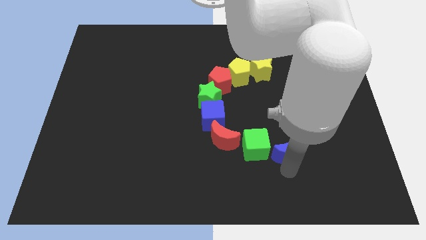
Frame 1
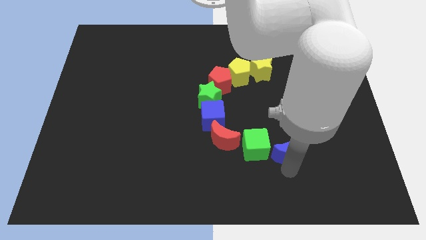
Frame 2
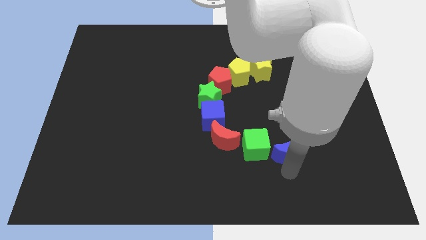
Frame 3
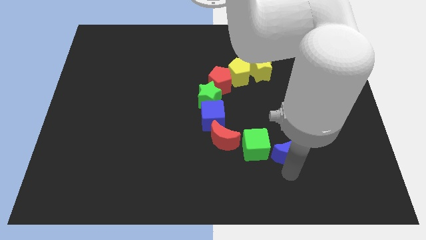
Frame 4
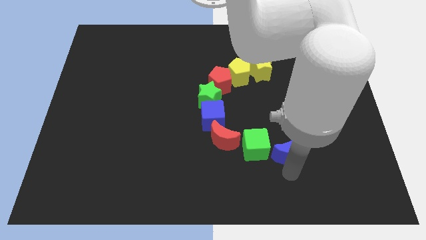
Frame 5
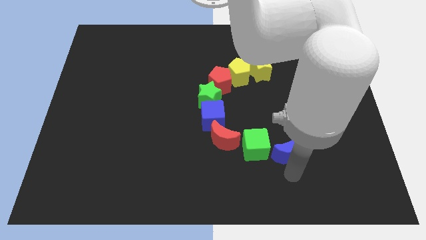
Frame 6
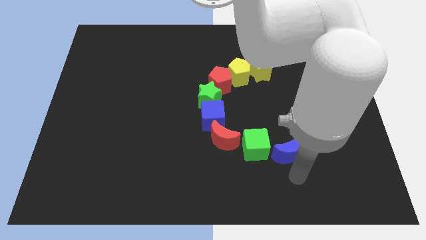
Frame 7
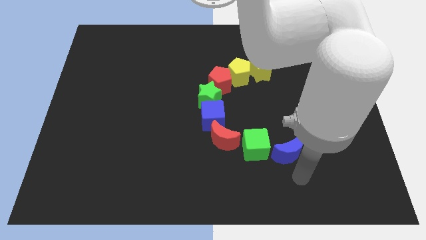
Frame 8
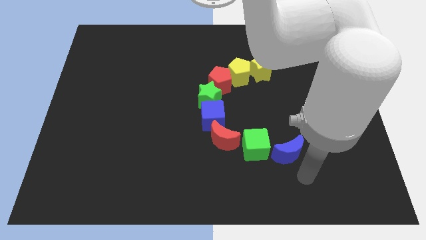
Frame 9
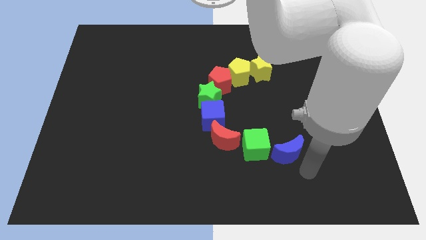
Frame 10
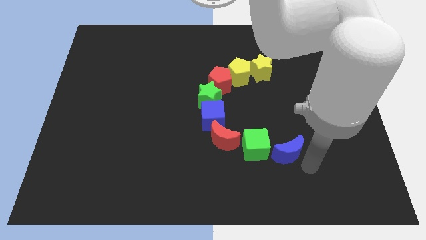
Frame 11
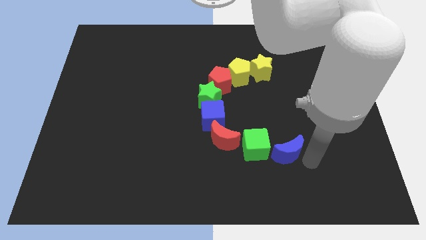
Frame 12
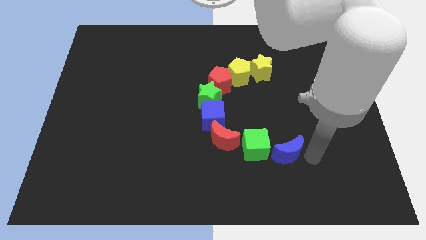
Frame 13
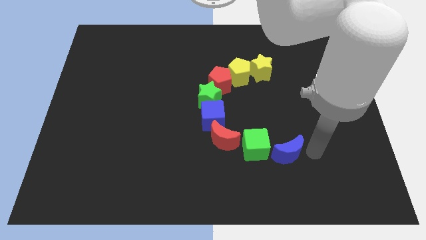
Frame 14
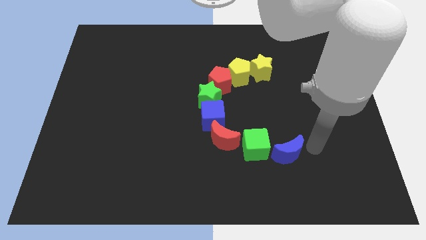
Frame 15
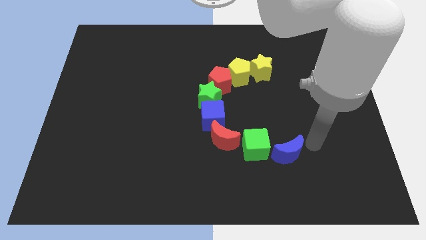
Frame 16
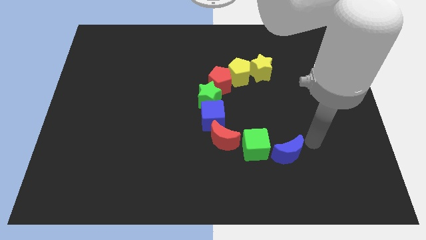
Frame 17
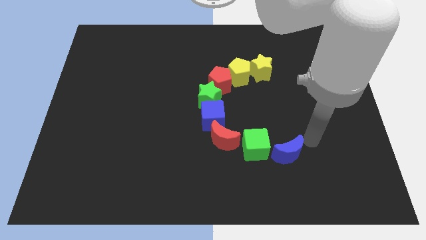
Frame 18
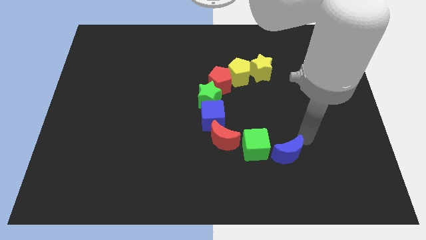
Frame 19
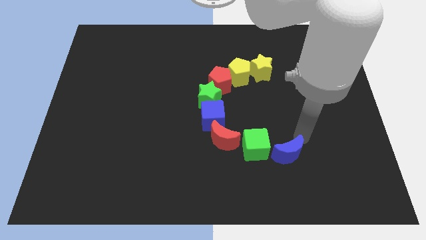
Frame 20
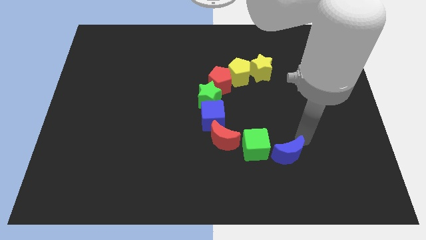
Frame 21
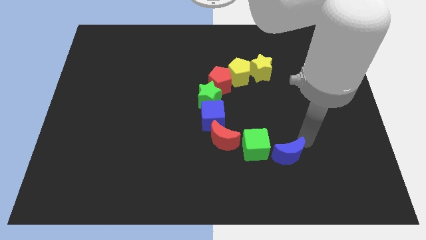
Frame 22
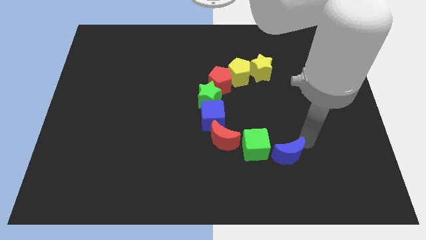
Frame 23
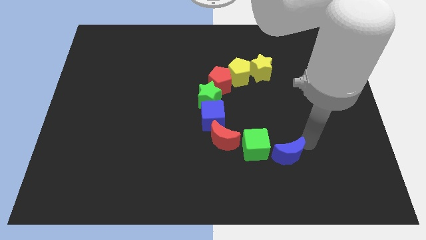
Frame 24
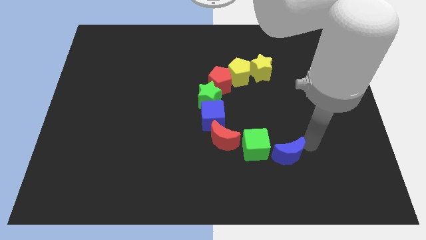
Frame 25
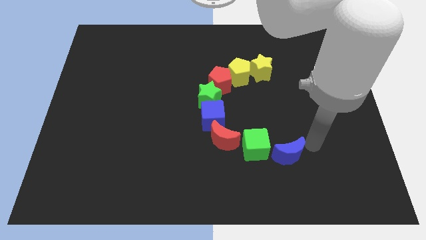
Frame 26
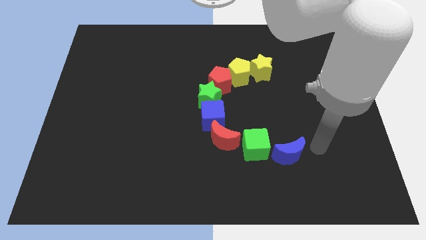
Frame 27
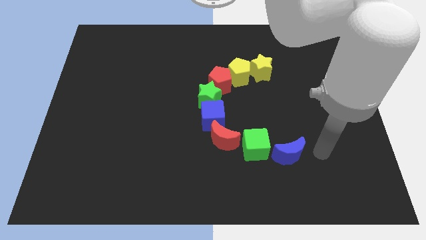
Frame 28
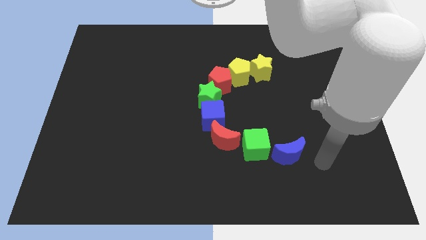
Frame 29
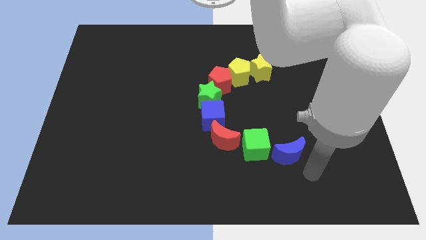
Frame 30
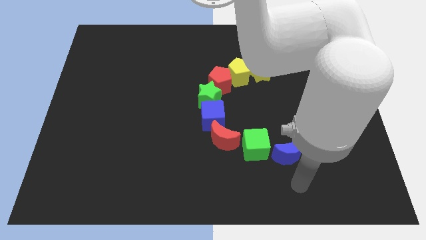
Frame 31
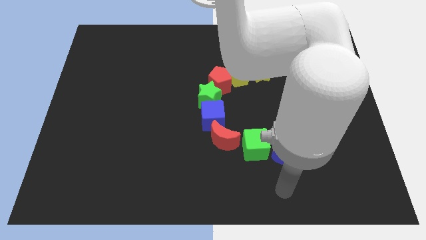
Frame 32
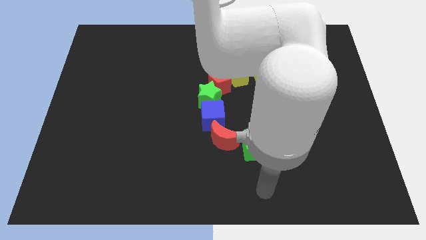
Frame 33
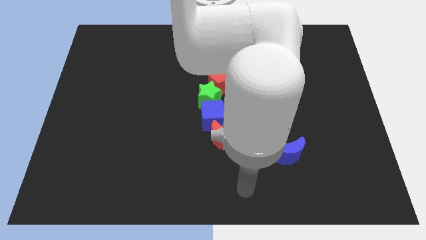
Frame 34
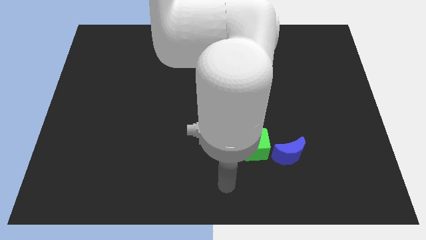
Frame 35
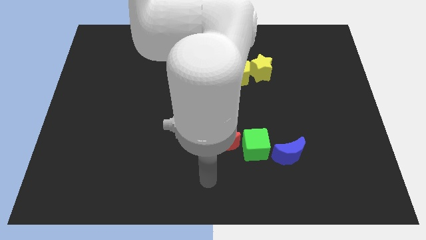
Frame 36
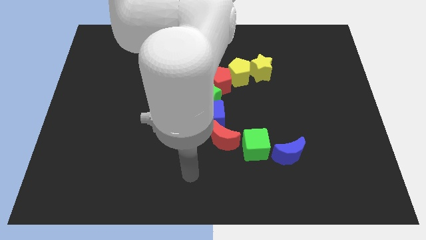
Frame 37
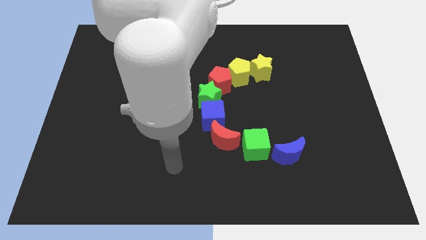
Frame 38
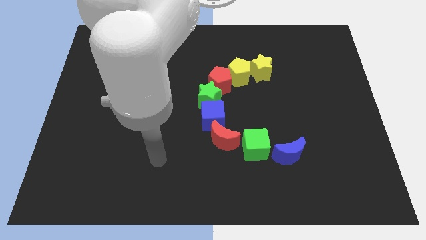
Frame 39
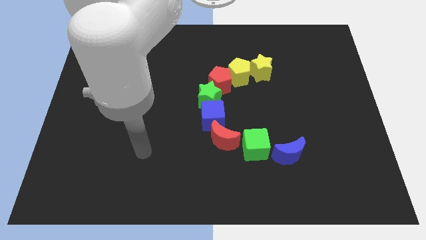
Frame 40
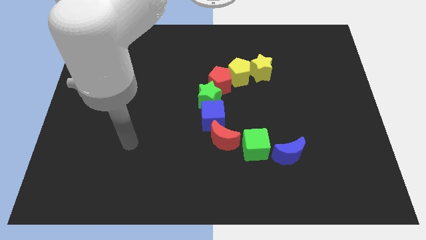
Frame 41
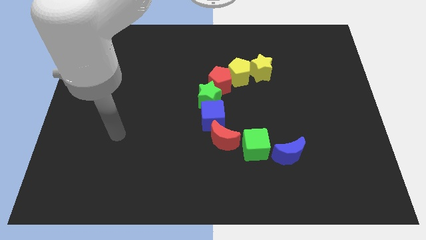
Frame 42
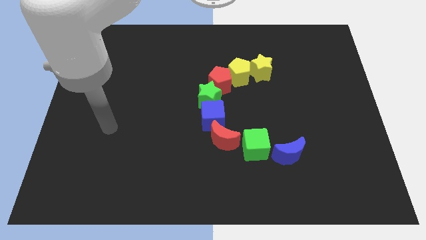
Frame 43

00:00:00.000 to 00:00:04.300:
move the arm away from the blue moon

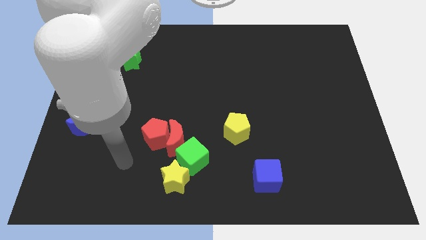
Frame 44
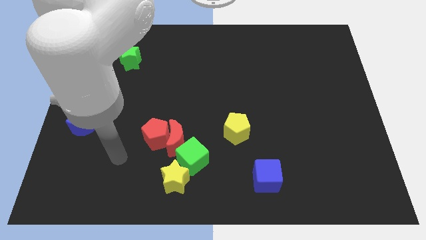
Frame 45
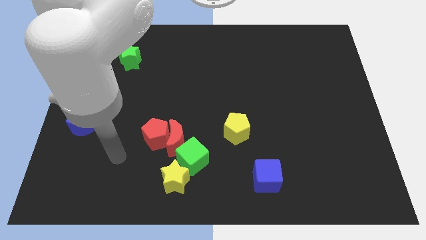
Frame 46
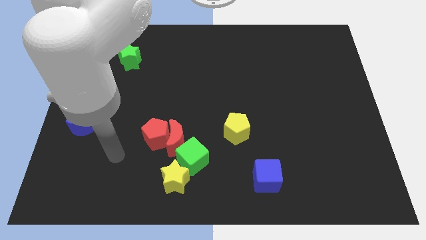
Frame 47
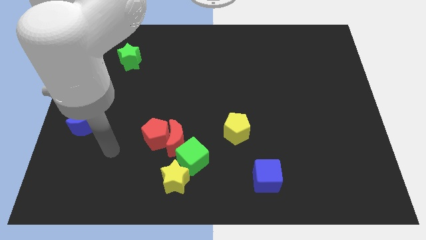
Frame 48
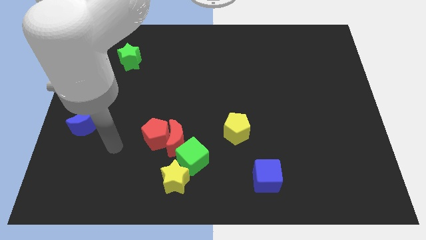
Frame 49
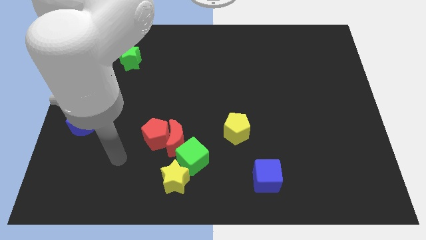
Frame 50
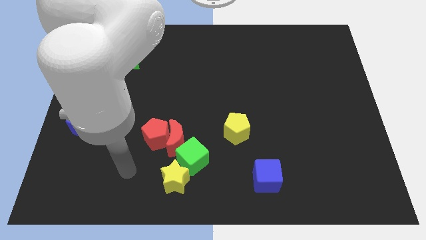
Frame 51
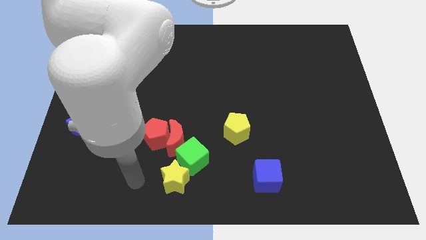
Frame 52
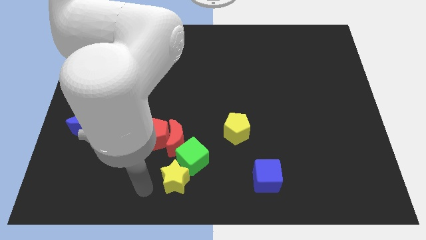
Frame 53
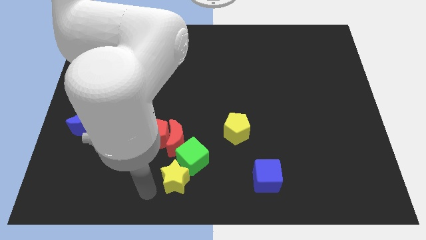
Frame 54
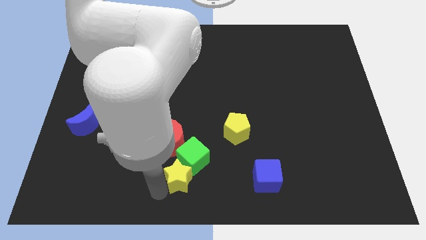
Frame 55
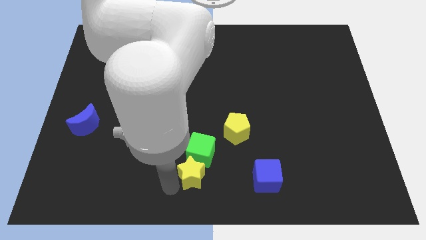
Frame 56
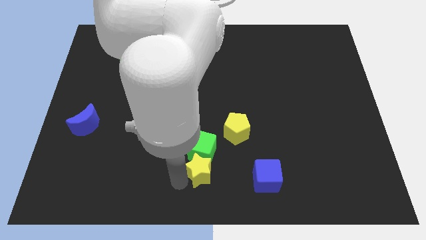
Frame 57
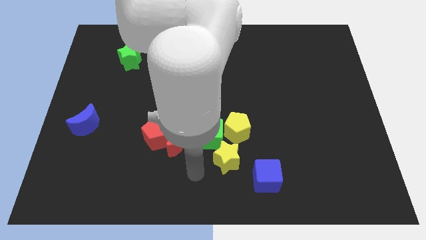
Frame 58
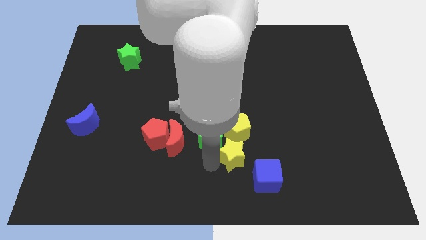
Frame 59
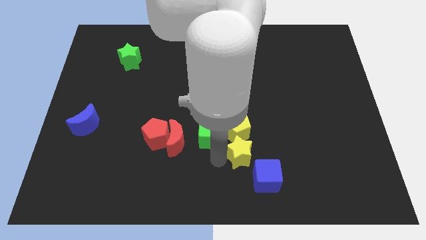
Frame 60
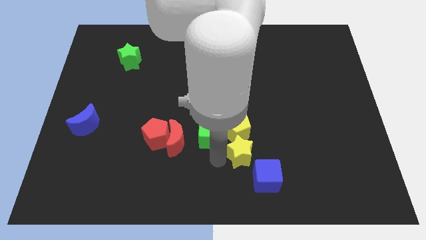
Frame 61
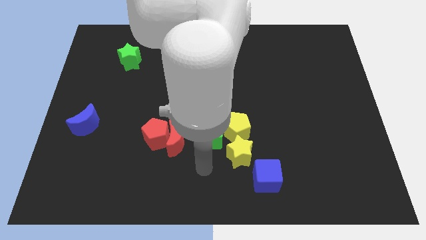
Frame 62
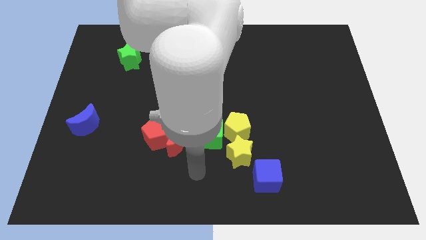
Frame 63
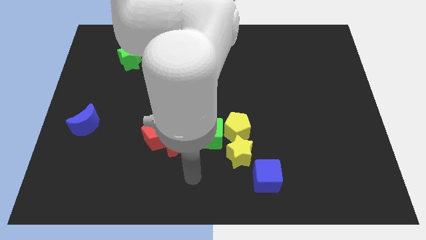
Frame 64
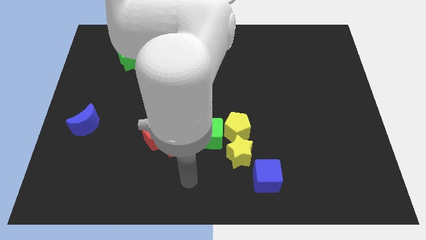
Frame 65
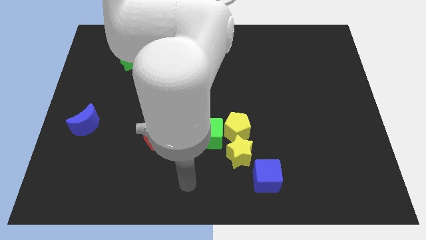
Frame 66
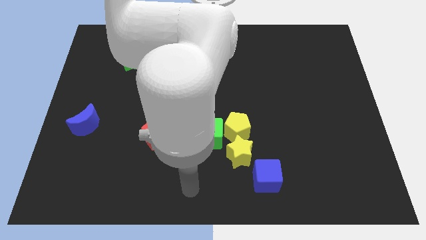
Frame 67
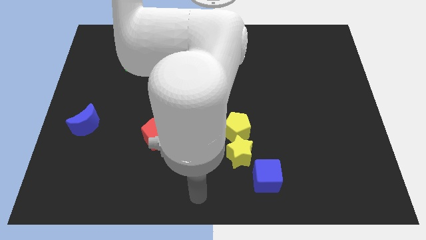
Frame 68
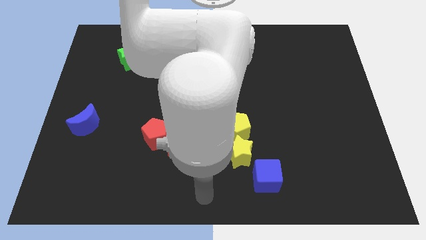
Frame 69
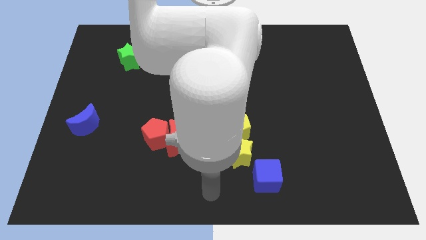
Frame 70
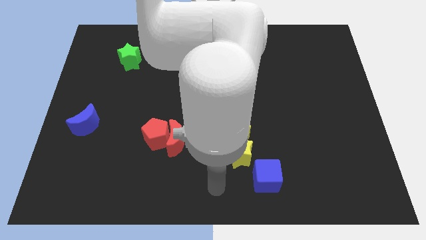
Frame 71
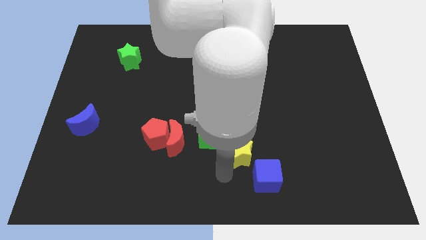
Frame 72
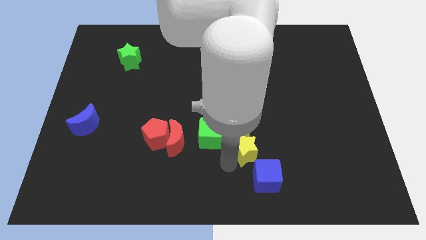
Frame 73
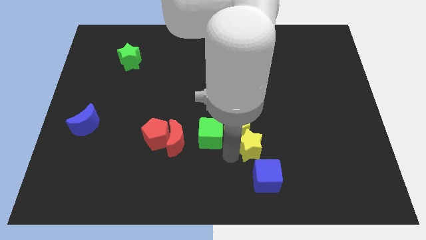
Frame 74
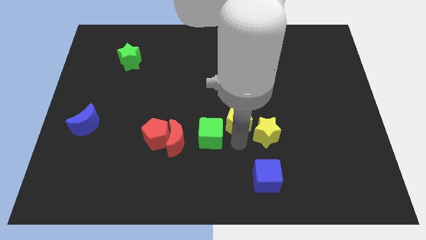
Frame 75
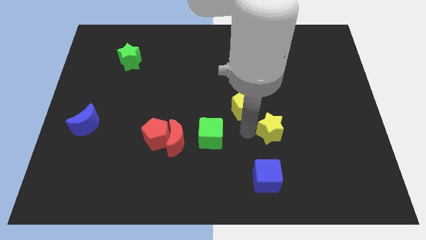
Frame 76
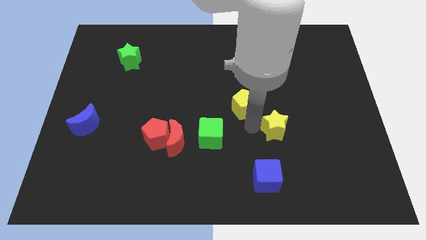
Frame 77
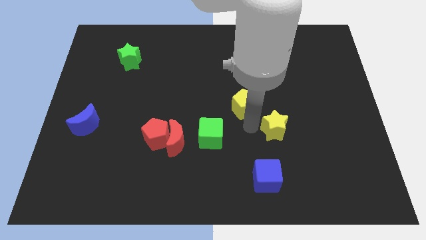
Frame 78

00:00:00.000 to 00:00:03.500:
move the yellow blocks to the top right of the board

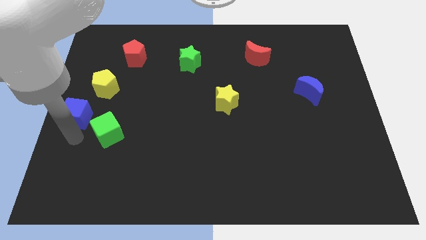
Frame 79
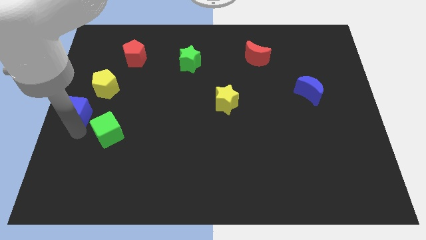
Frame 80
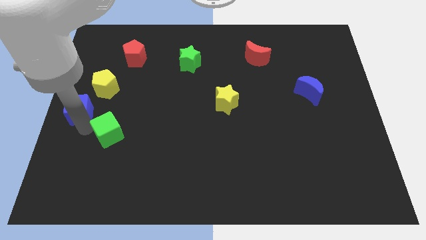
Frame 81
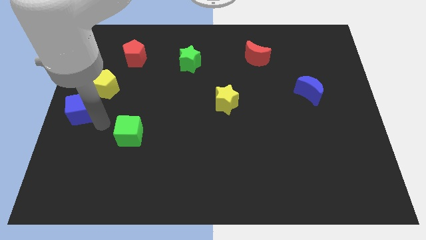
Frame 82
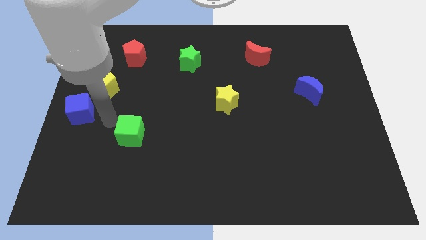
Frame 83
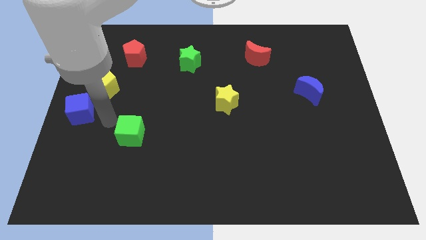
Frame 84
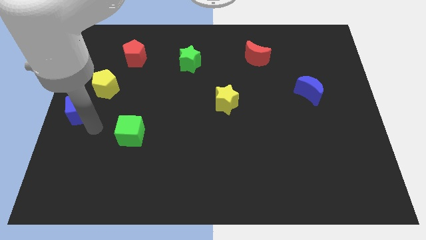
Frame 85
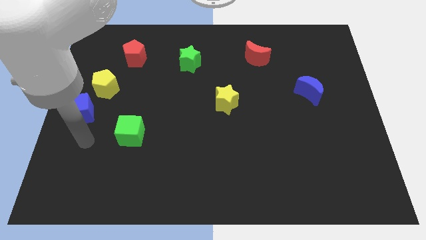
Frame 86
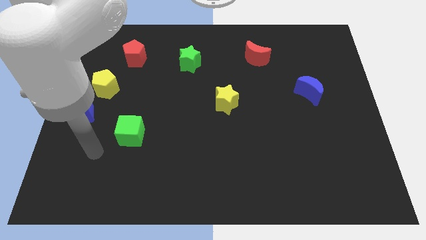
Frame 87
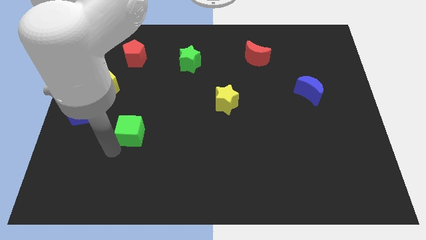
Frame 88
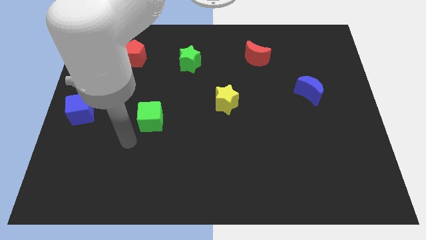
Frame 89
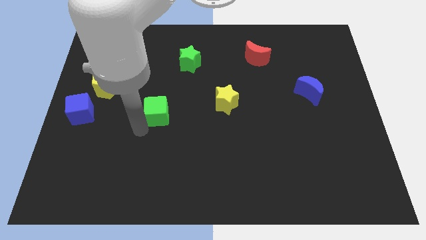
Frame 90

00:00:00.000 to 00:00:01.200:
separate green cube from blue cube

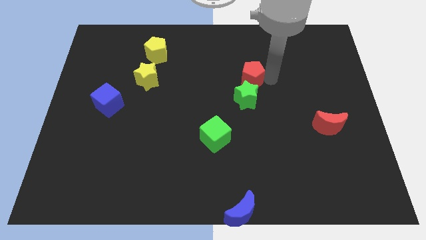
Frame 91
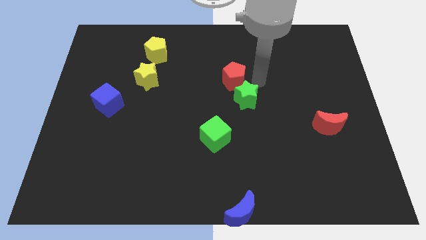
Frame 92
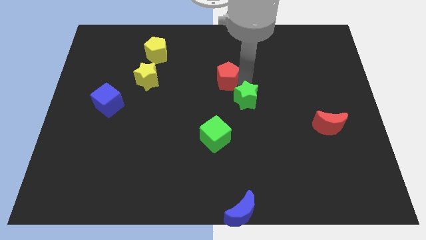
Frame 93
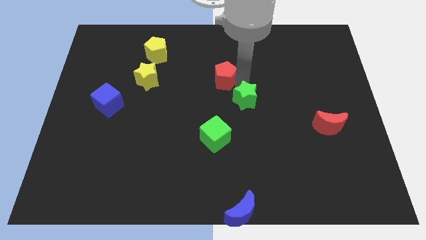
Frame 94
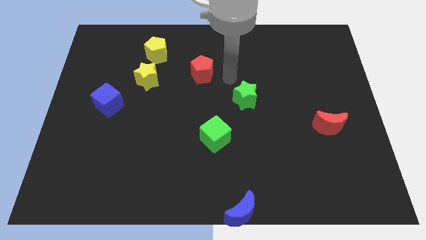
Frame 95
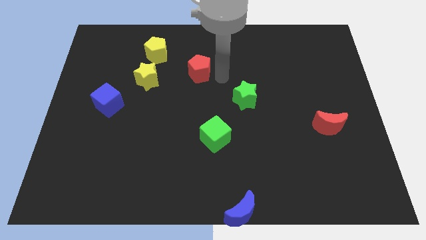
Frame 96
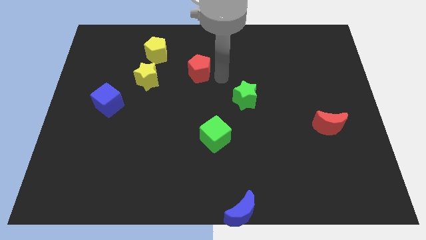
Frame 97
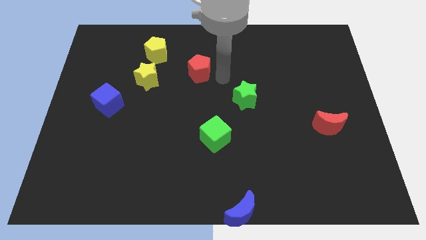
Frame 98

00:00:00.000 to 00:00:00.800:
place red pentagon in between yellow pentagon and green star
